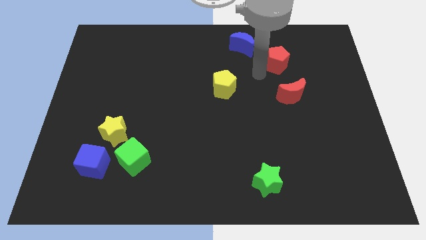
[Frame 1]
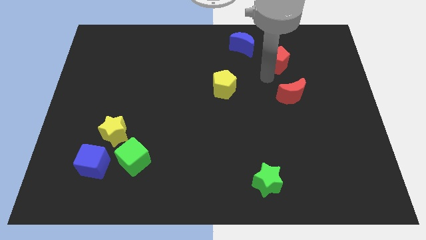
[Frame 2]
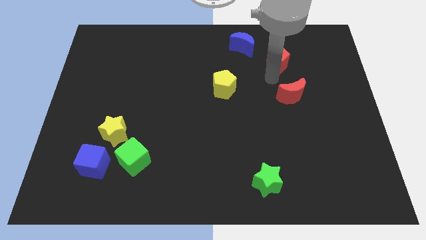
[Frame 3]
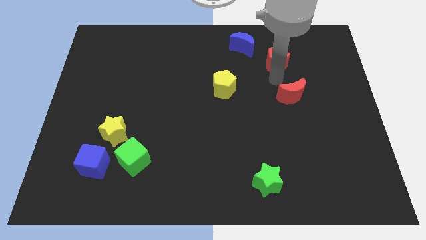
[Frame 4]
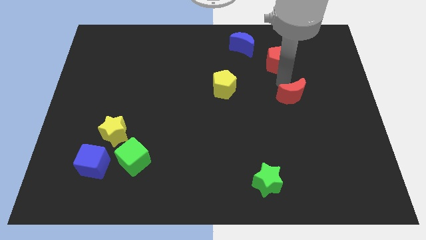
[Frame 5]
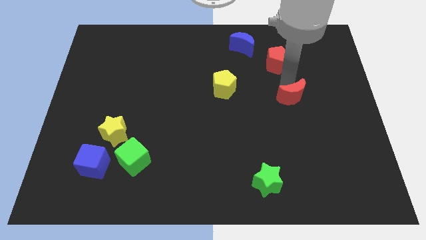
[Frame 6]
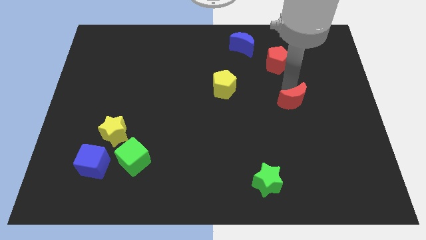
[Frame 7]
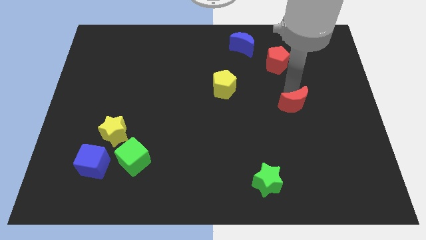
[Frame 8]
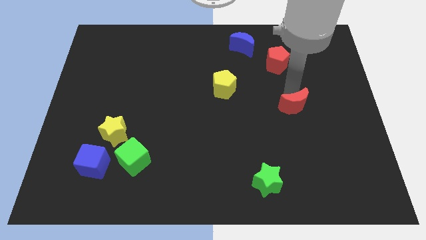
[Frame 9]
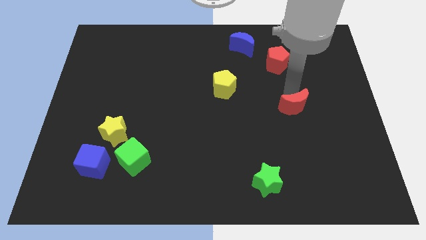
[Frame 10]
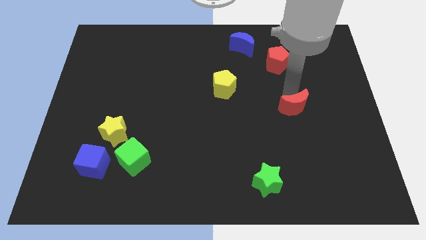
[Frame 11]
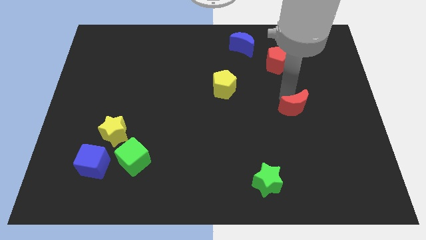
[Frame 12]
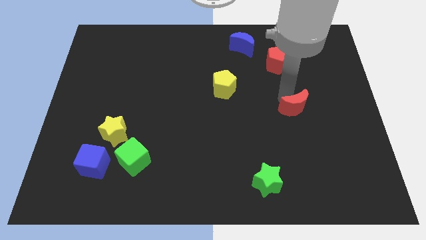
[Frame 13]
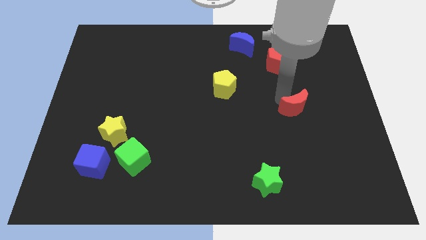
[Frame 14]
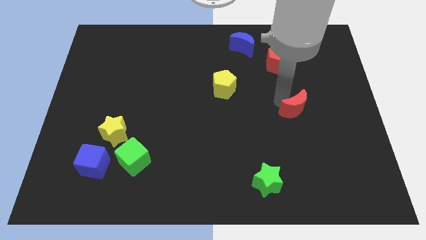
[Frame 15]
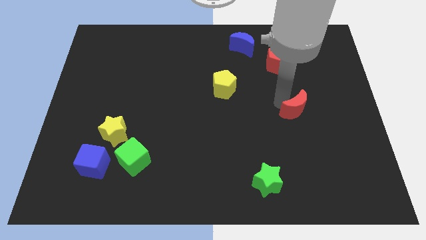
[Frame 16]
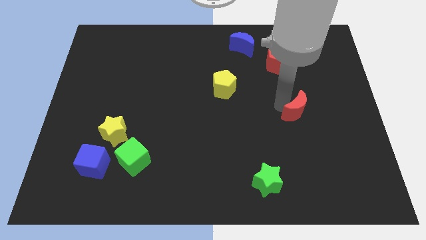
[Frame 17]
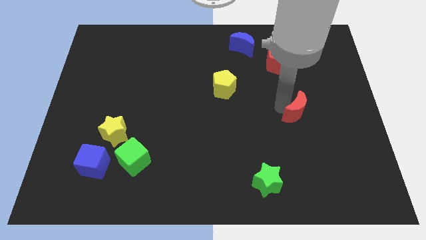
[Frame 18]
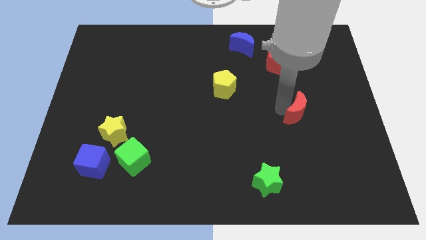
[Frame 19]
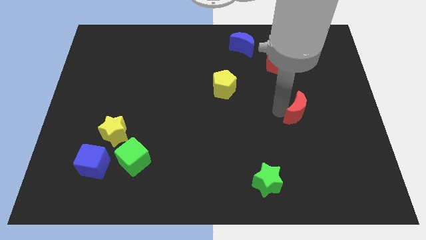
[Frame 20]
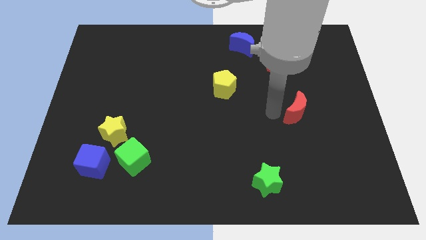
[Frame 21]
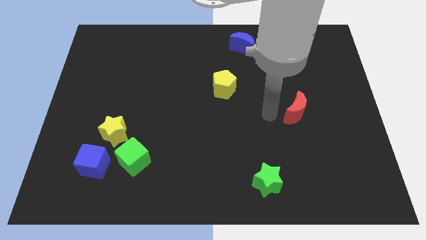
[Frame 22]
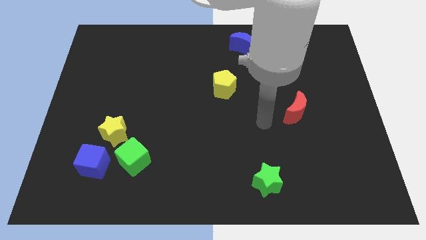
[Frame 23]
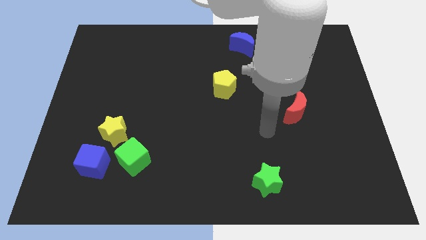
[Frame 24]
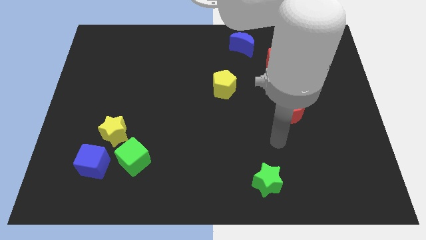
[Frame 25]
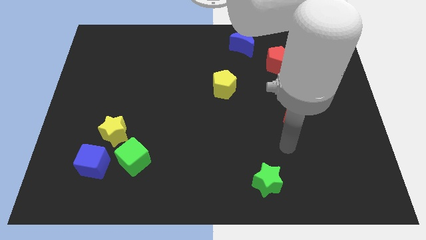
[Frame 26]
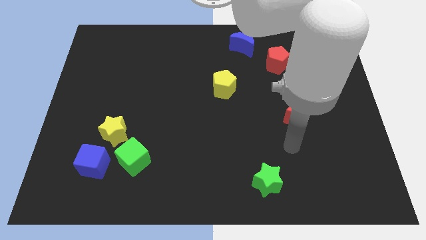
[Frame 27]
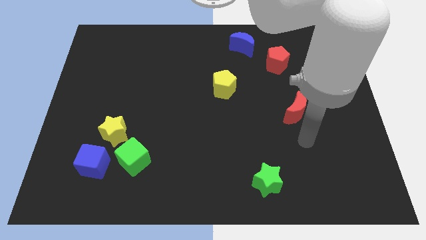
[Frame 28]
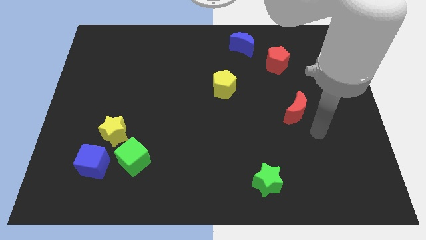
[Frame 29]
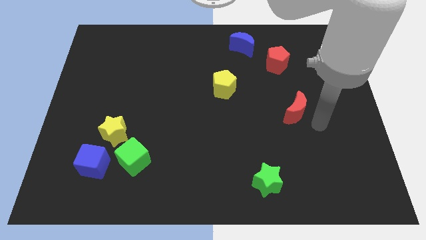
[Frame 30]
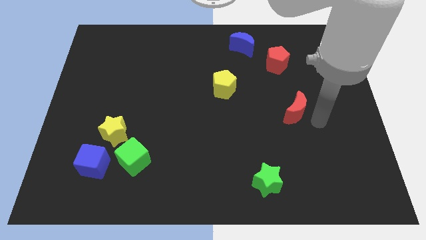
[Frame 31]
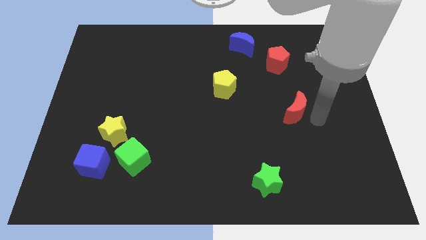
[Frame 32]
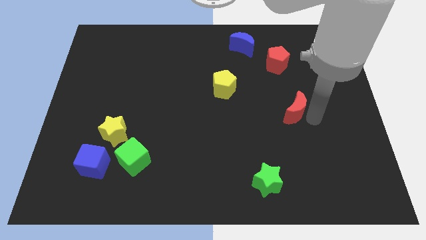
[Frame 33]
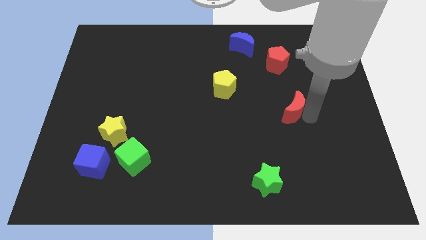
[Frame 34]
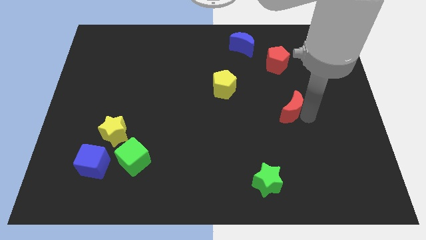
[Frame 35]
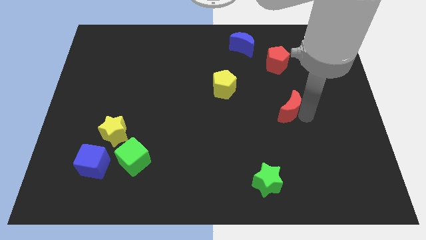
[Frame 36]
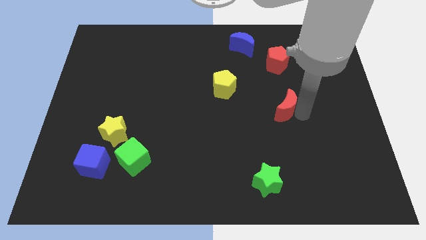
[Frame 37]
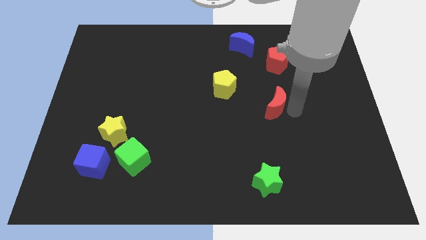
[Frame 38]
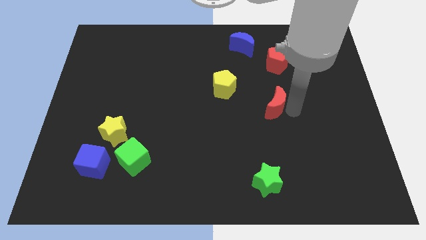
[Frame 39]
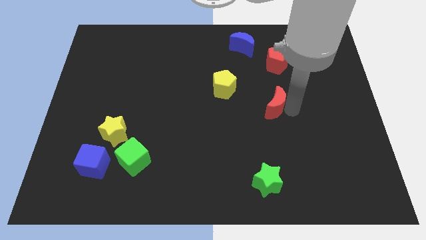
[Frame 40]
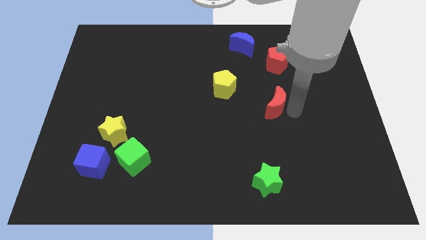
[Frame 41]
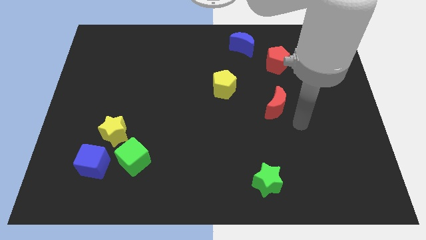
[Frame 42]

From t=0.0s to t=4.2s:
push the red moon to the center

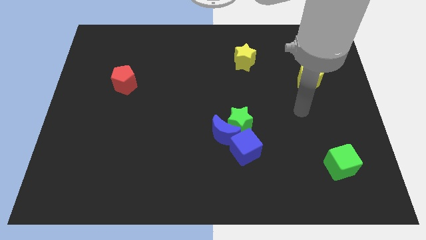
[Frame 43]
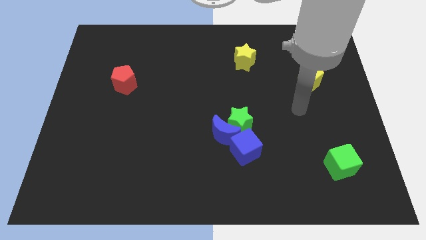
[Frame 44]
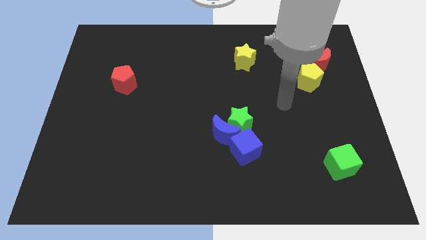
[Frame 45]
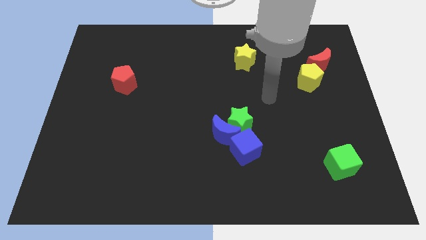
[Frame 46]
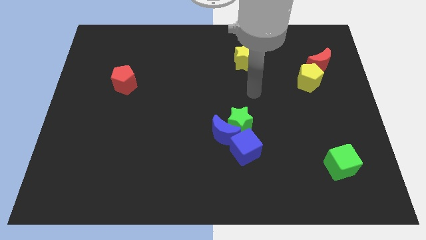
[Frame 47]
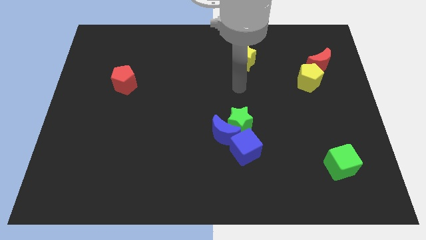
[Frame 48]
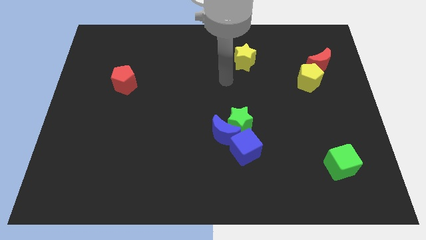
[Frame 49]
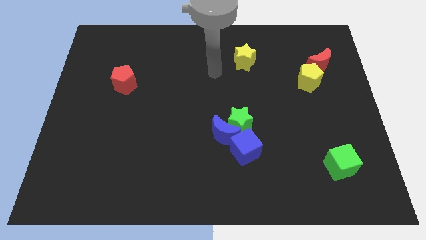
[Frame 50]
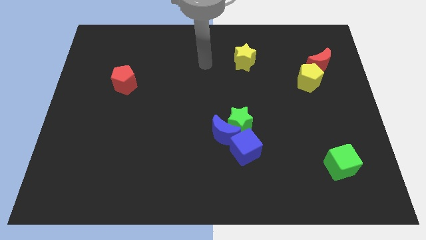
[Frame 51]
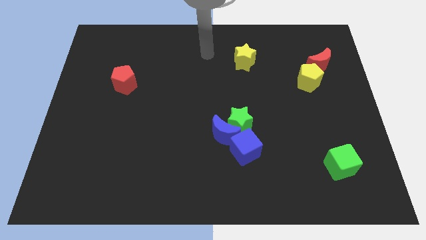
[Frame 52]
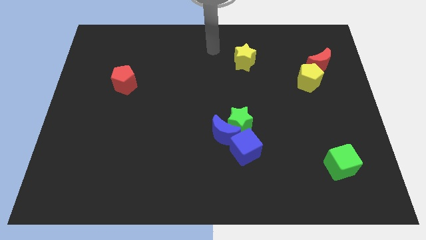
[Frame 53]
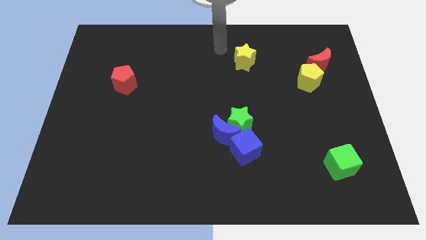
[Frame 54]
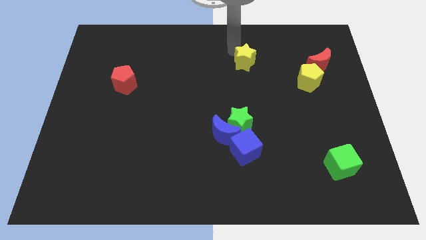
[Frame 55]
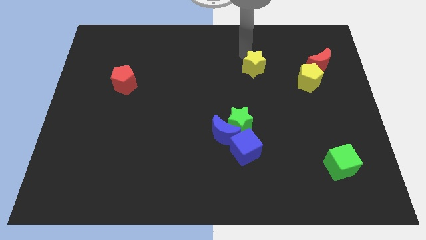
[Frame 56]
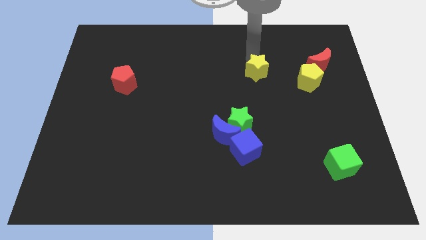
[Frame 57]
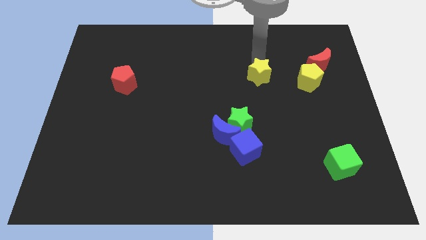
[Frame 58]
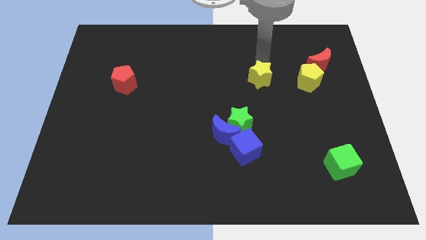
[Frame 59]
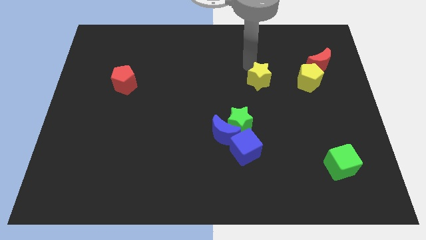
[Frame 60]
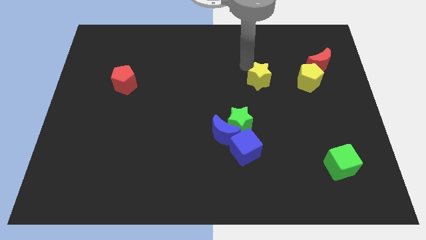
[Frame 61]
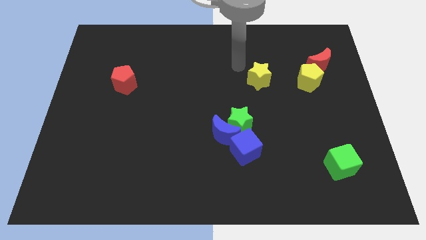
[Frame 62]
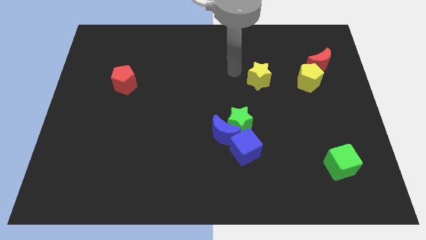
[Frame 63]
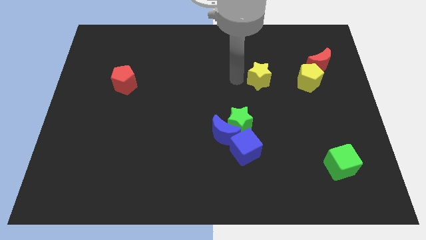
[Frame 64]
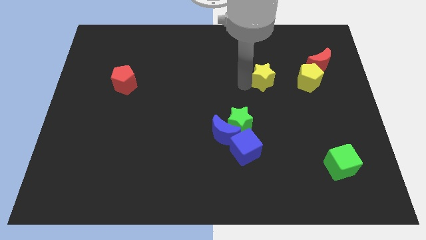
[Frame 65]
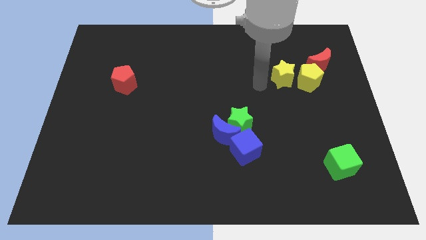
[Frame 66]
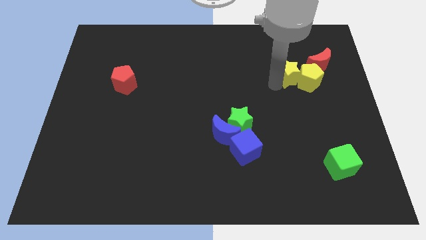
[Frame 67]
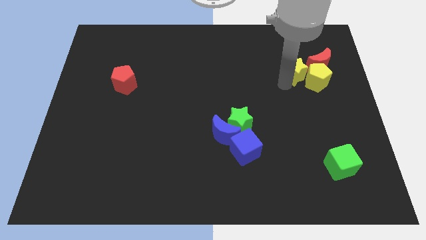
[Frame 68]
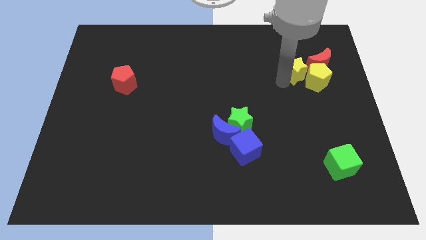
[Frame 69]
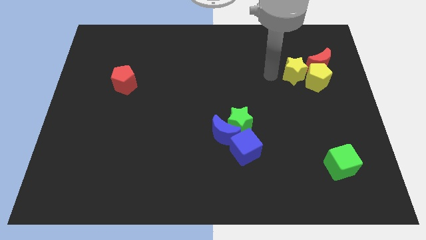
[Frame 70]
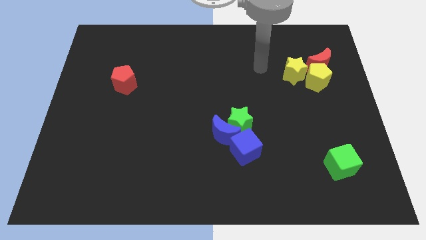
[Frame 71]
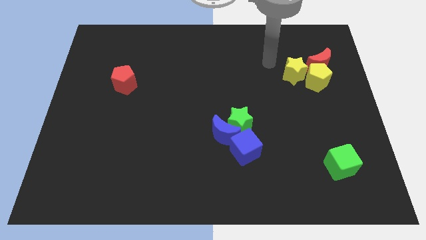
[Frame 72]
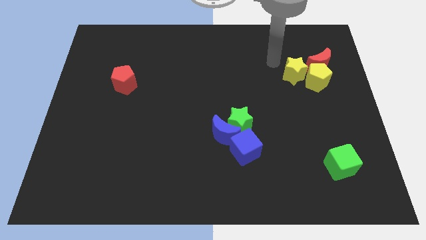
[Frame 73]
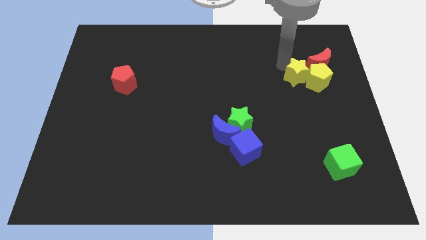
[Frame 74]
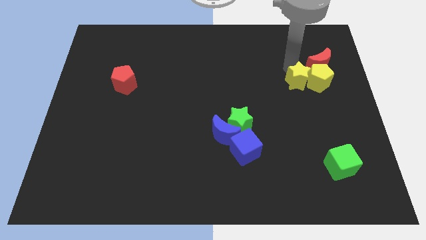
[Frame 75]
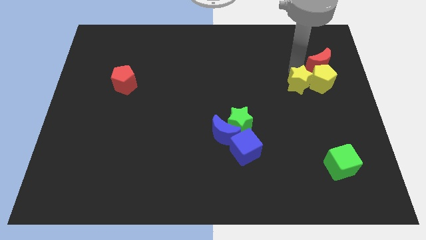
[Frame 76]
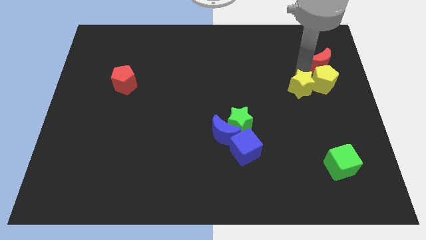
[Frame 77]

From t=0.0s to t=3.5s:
place yellow star into yellow pentagon

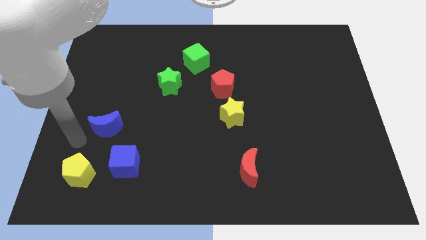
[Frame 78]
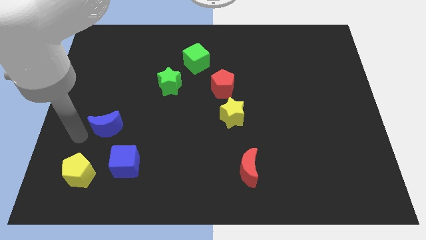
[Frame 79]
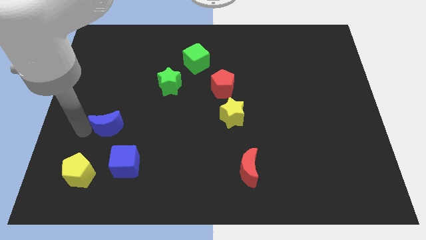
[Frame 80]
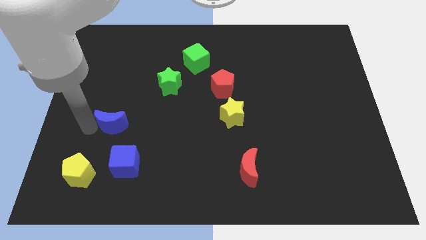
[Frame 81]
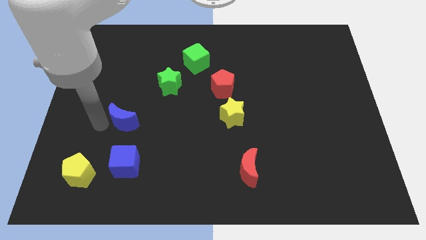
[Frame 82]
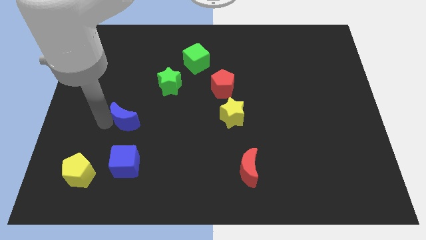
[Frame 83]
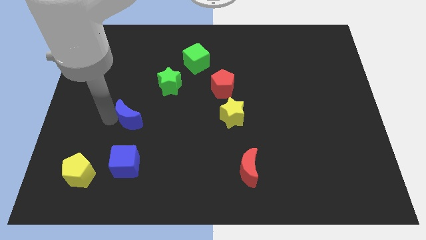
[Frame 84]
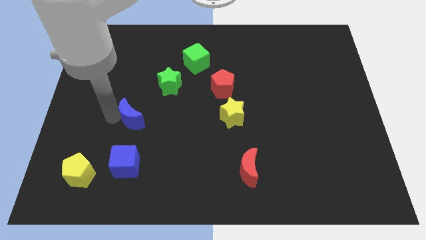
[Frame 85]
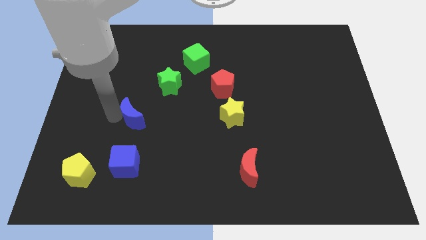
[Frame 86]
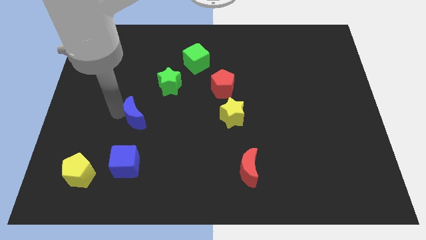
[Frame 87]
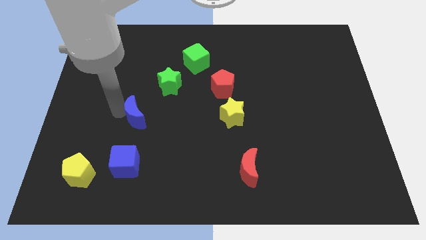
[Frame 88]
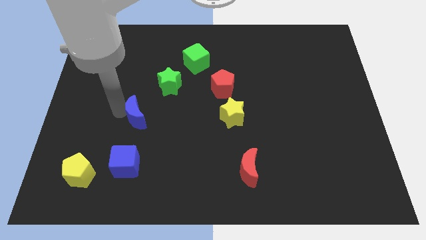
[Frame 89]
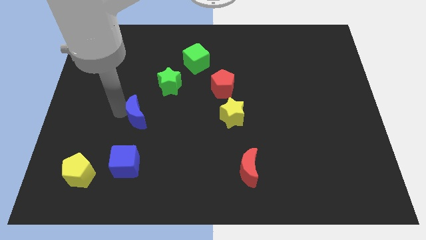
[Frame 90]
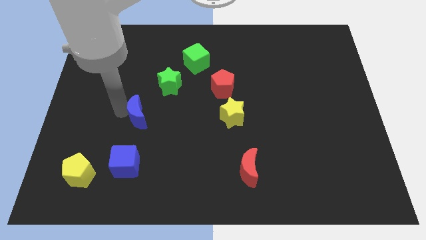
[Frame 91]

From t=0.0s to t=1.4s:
place blue moon above the blue cube
